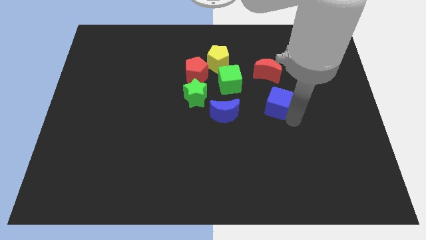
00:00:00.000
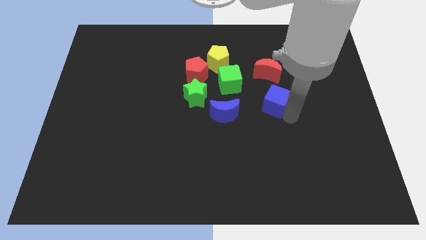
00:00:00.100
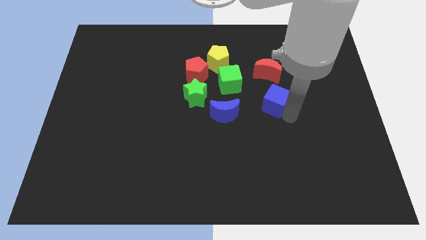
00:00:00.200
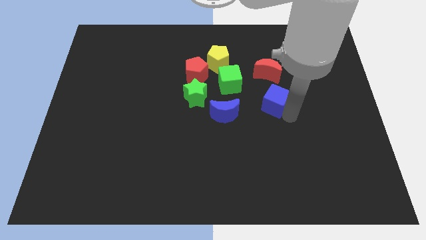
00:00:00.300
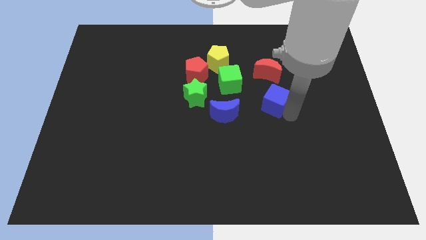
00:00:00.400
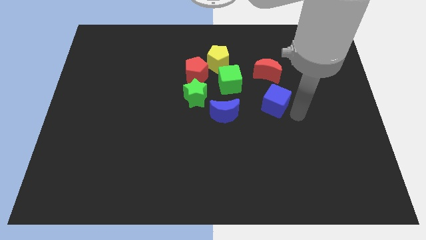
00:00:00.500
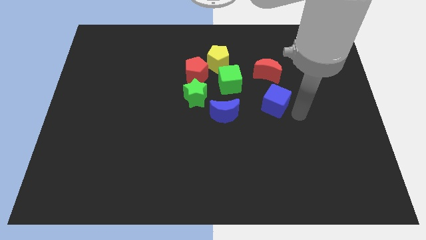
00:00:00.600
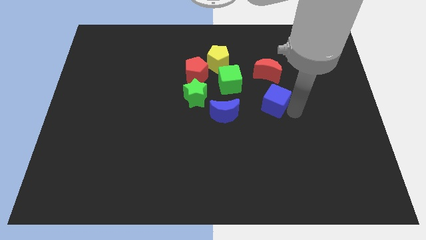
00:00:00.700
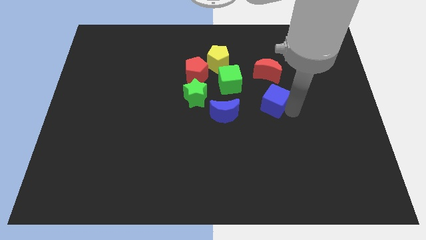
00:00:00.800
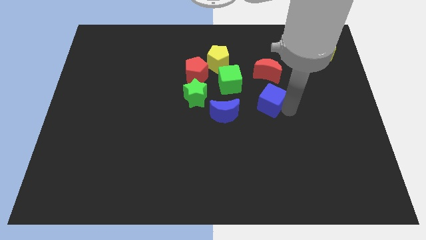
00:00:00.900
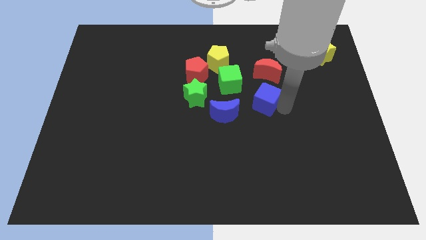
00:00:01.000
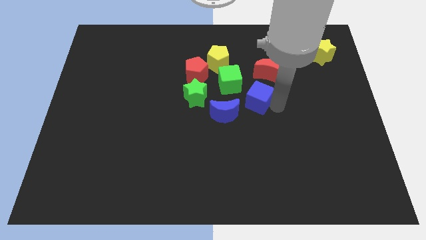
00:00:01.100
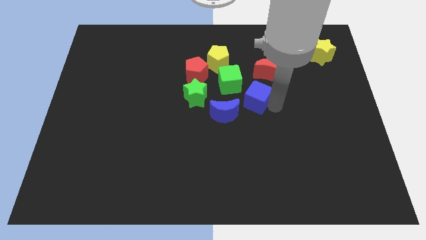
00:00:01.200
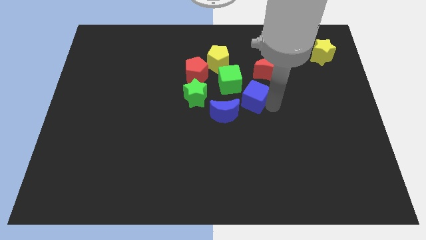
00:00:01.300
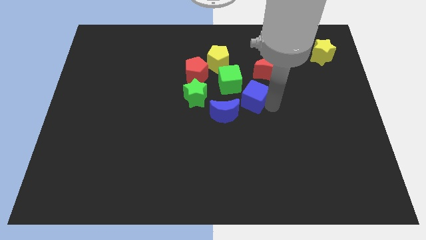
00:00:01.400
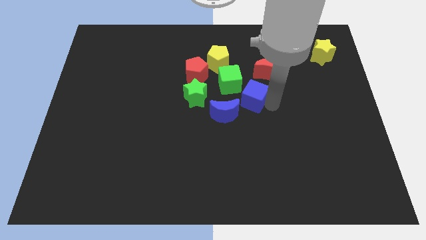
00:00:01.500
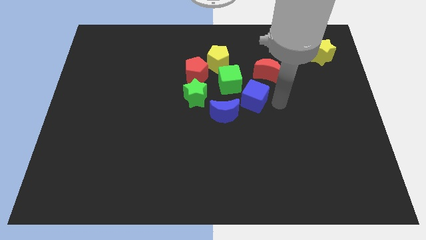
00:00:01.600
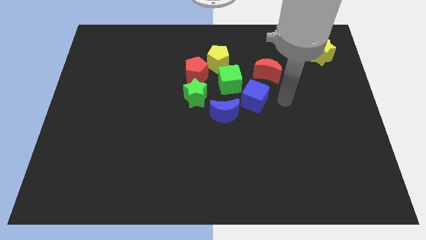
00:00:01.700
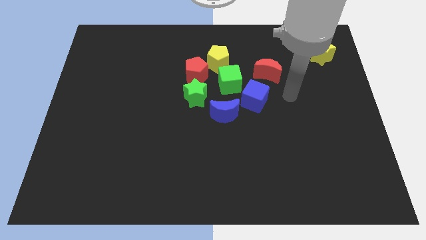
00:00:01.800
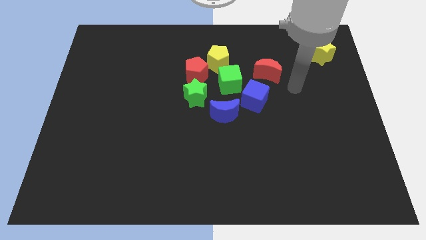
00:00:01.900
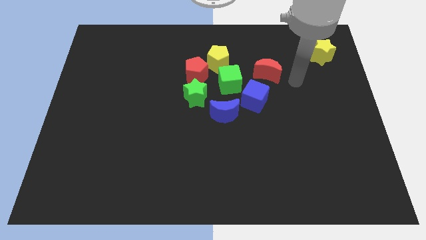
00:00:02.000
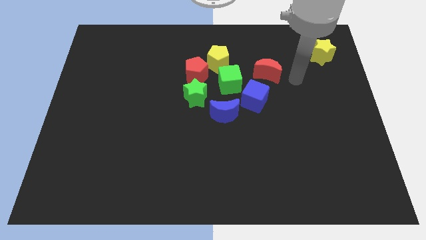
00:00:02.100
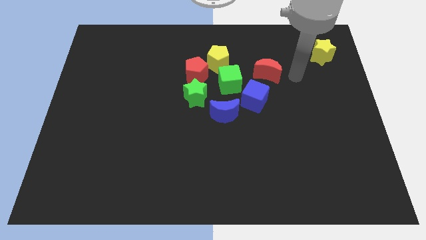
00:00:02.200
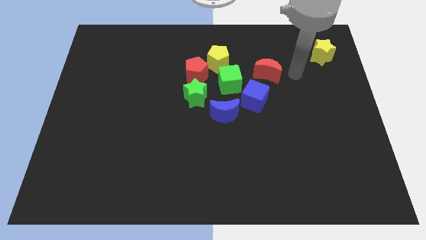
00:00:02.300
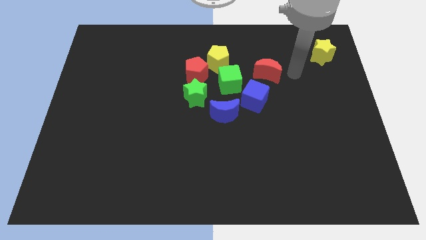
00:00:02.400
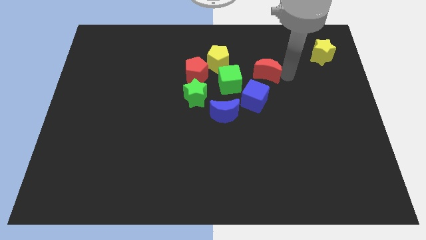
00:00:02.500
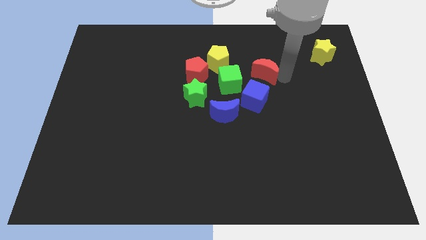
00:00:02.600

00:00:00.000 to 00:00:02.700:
push the blue cube below the green cube

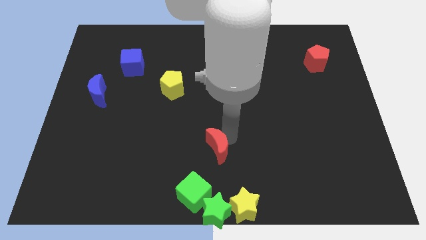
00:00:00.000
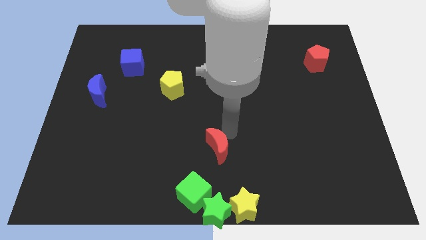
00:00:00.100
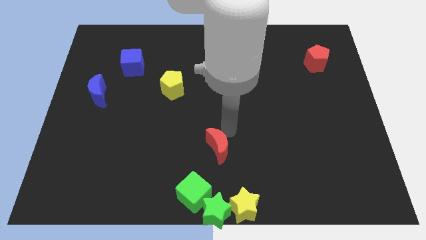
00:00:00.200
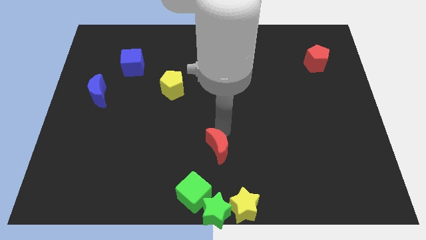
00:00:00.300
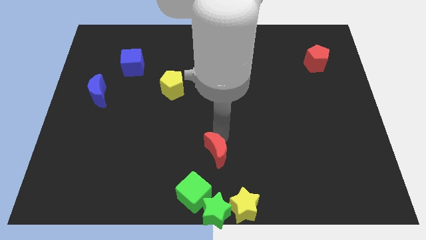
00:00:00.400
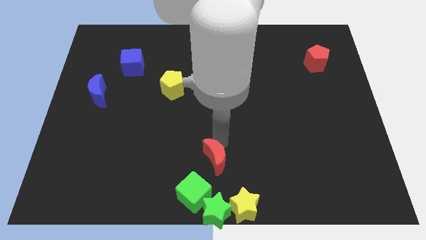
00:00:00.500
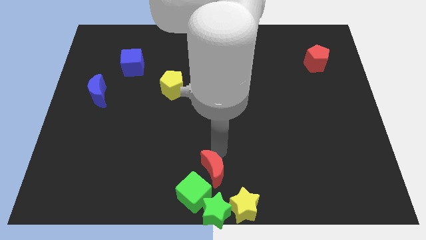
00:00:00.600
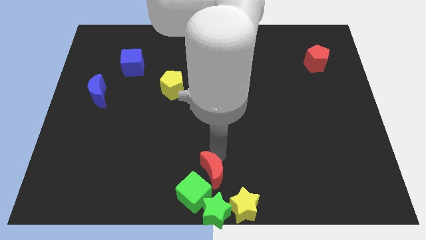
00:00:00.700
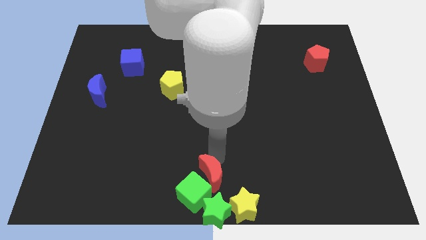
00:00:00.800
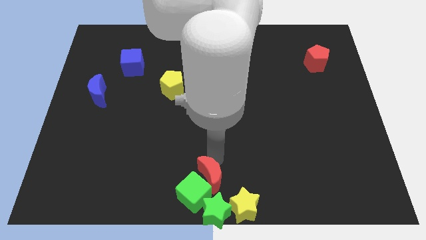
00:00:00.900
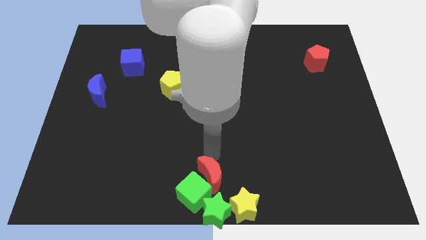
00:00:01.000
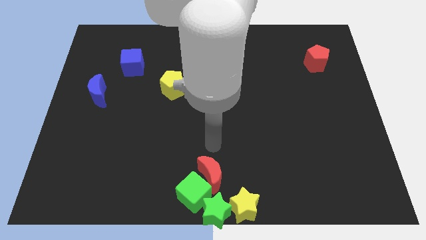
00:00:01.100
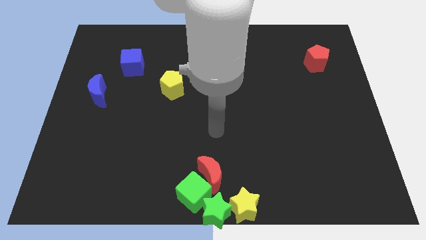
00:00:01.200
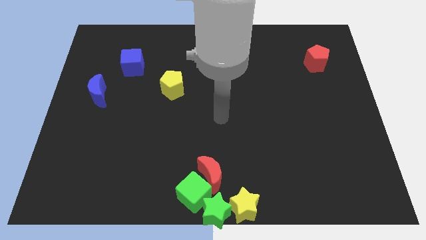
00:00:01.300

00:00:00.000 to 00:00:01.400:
move the red moon into the green cube

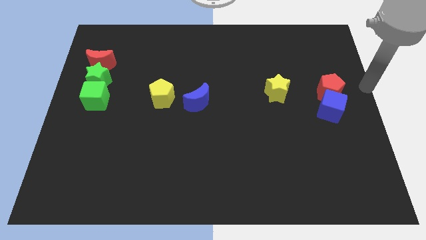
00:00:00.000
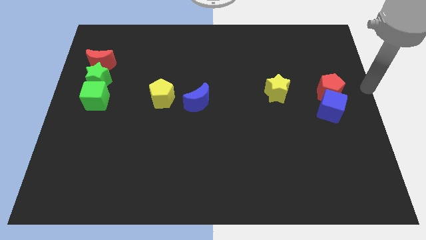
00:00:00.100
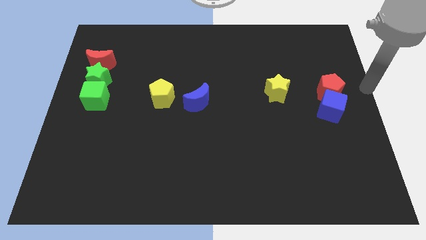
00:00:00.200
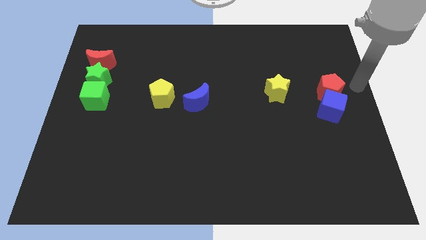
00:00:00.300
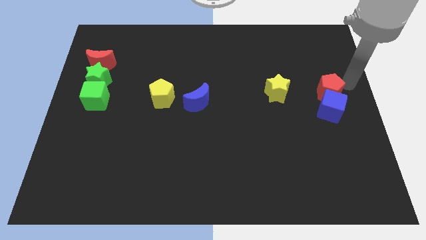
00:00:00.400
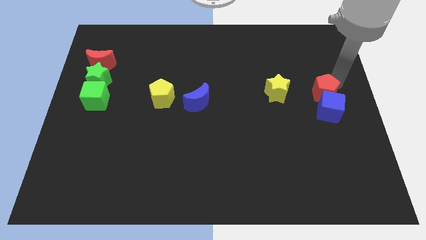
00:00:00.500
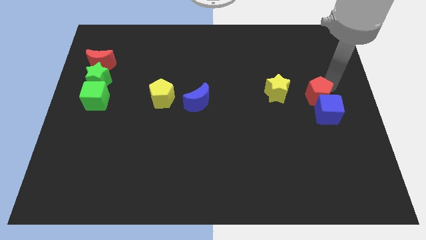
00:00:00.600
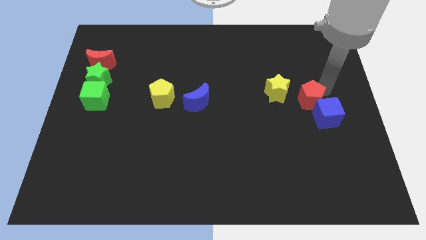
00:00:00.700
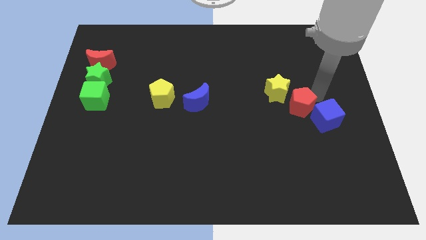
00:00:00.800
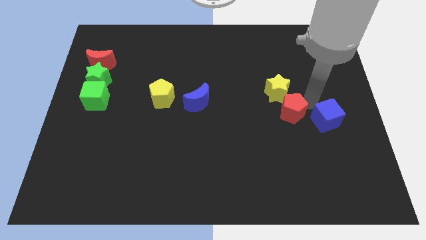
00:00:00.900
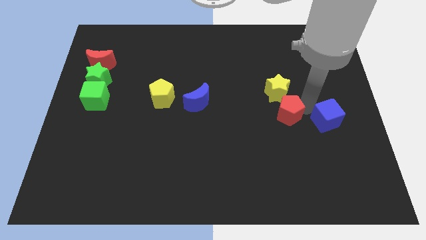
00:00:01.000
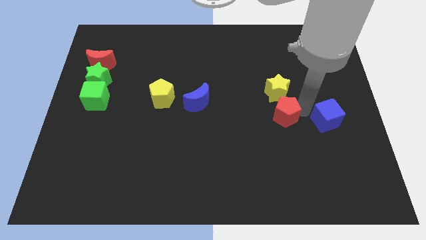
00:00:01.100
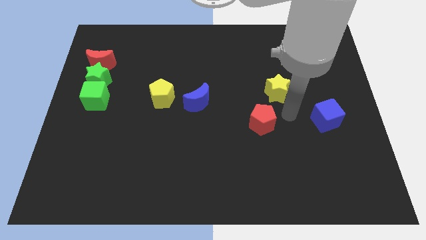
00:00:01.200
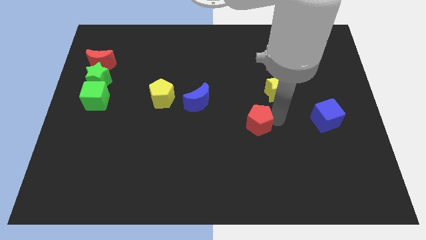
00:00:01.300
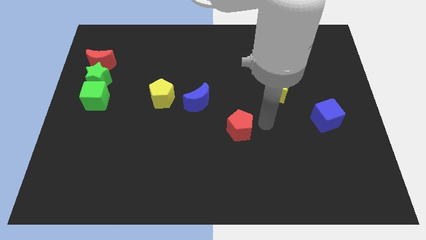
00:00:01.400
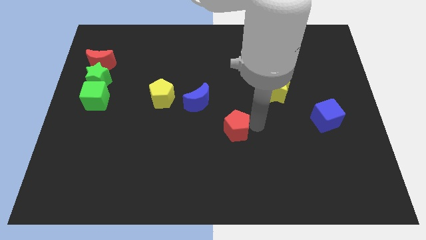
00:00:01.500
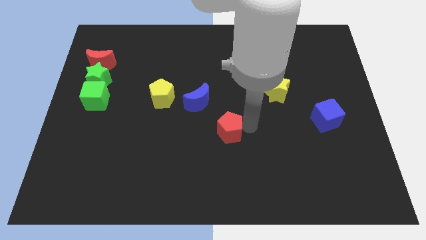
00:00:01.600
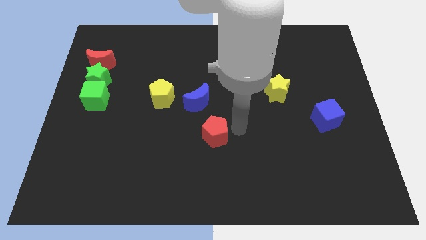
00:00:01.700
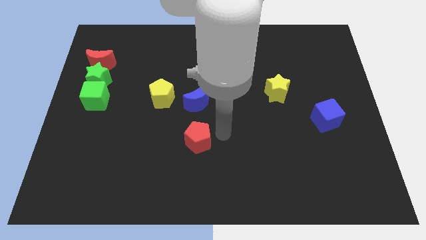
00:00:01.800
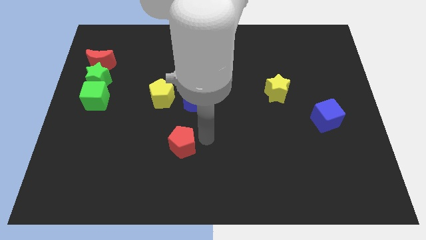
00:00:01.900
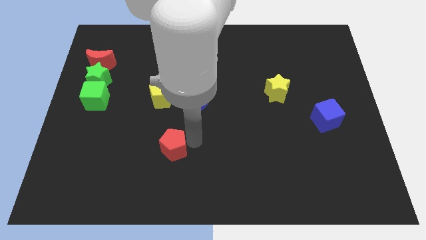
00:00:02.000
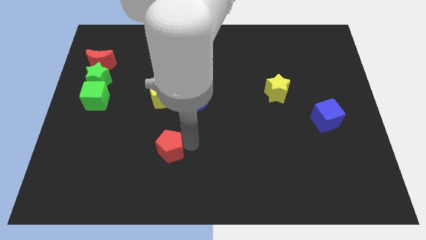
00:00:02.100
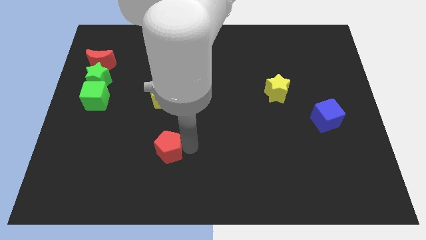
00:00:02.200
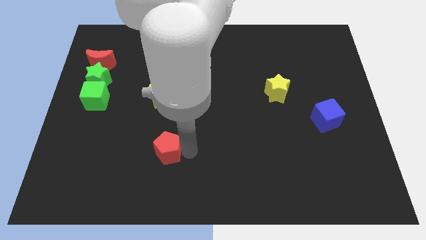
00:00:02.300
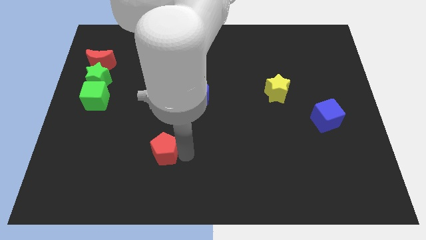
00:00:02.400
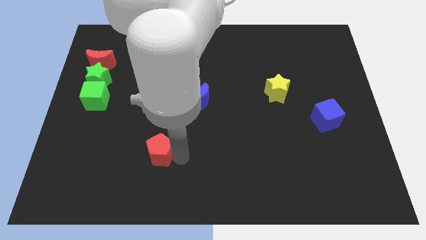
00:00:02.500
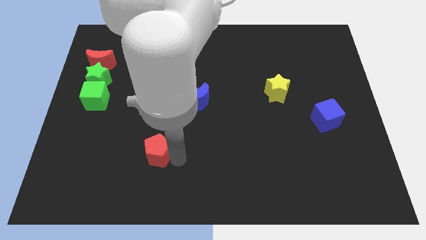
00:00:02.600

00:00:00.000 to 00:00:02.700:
push red pentagon below yellow pentagon

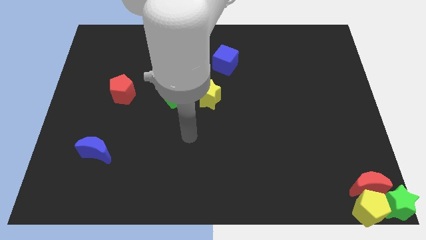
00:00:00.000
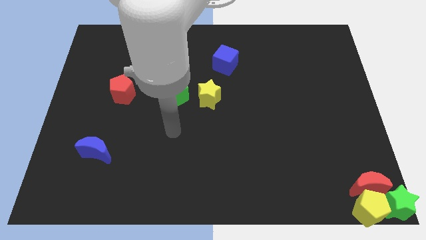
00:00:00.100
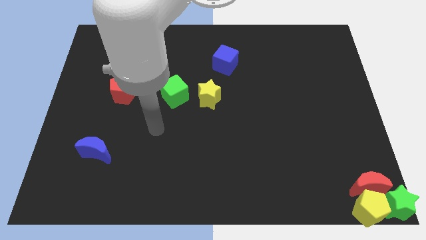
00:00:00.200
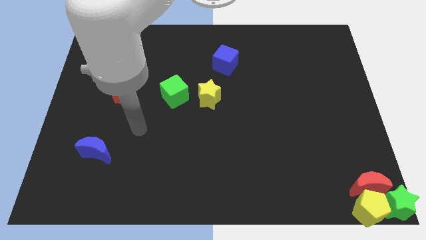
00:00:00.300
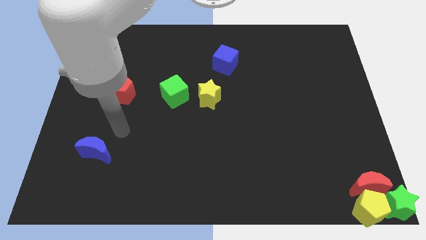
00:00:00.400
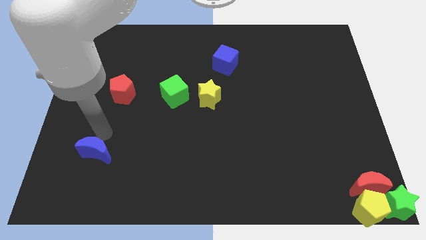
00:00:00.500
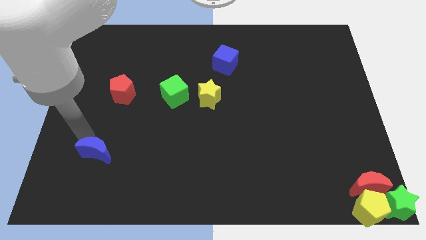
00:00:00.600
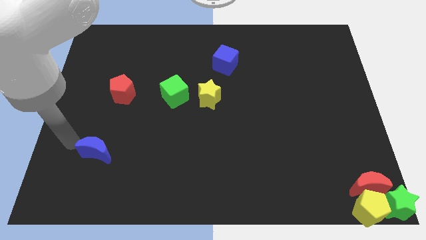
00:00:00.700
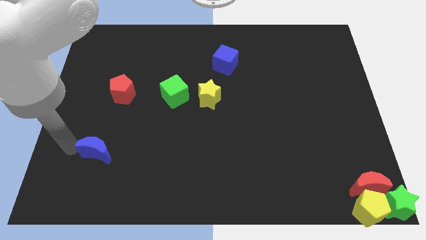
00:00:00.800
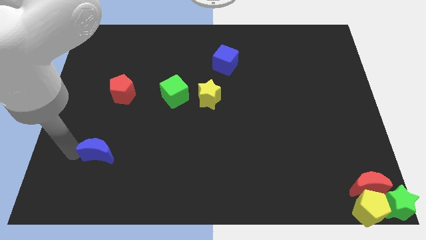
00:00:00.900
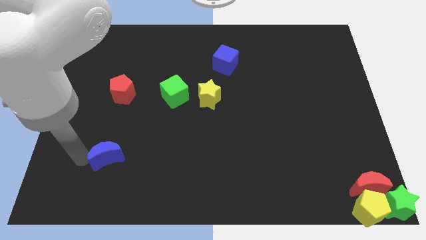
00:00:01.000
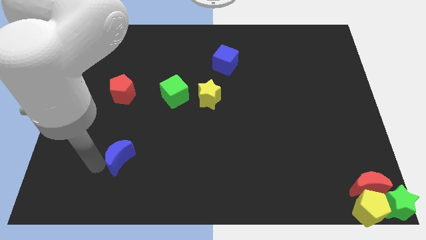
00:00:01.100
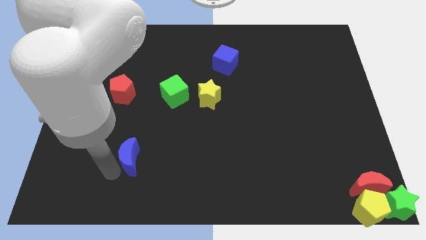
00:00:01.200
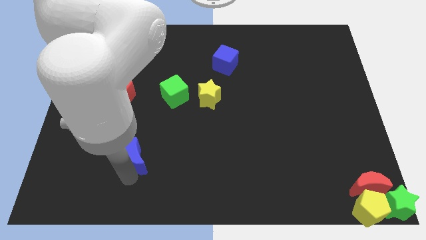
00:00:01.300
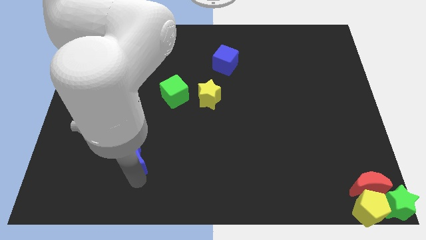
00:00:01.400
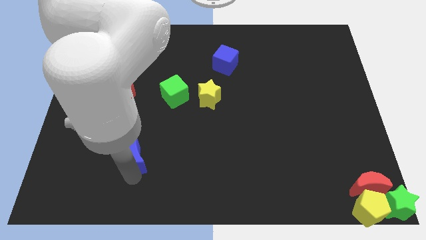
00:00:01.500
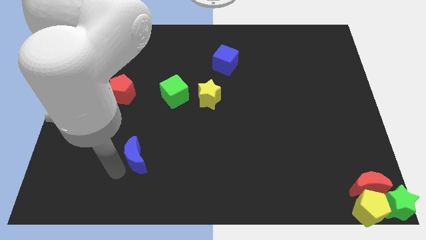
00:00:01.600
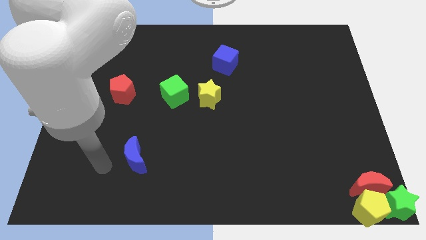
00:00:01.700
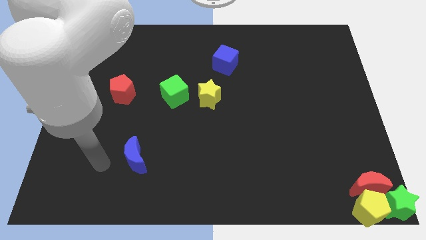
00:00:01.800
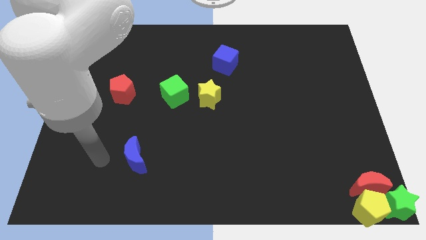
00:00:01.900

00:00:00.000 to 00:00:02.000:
push the blue moon to the center

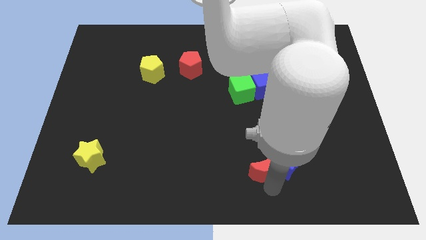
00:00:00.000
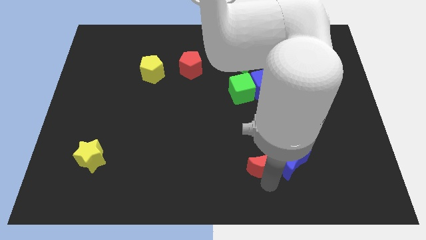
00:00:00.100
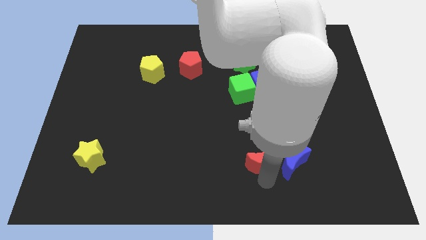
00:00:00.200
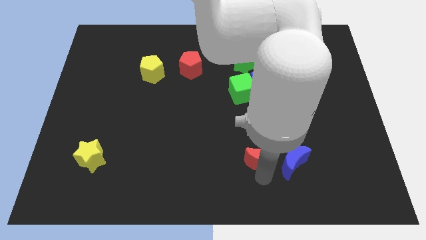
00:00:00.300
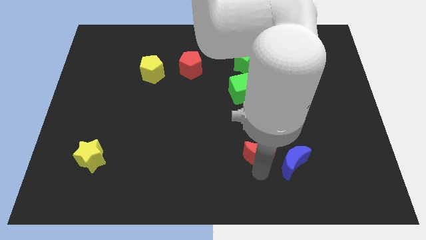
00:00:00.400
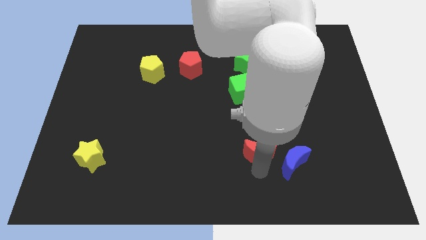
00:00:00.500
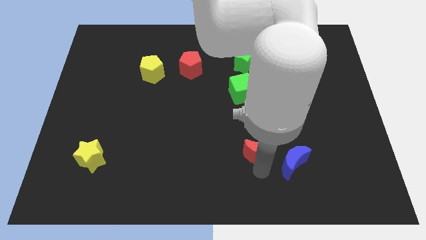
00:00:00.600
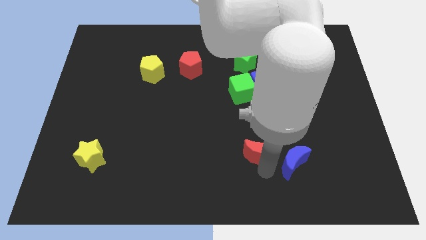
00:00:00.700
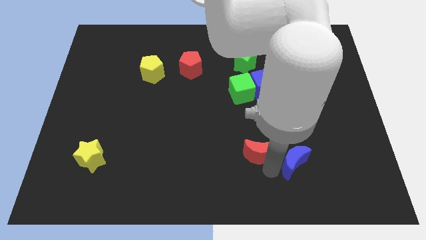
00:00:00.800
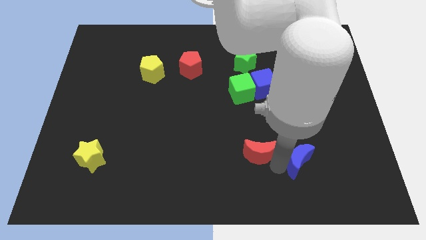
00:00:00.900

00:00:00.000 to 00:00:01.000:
push the red moon upward slightly
